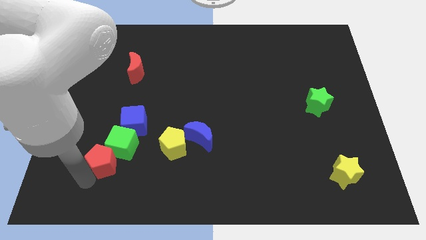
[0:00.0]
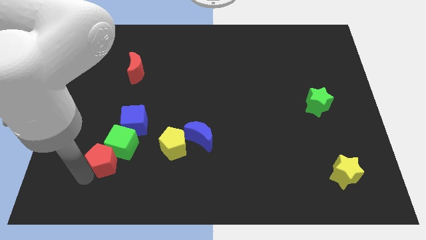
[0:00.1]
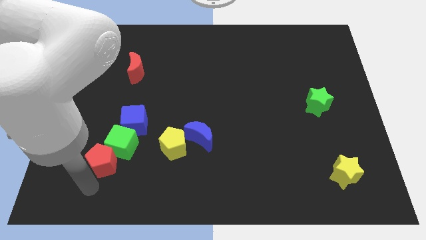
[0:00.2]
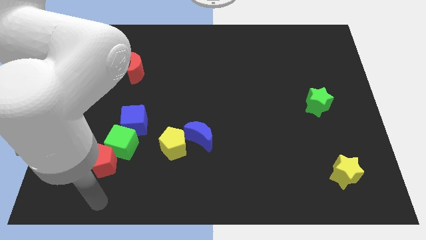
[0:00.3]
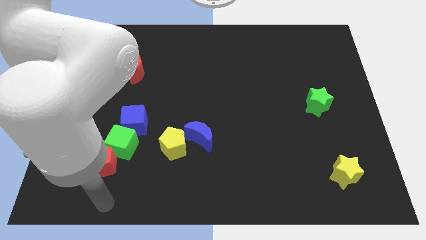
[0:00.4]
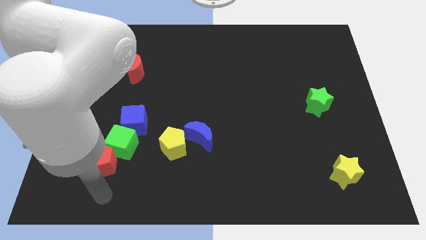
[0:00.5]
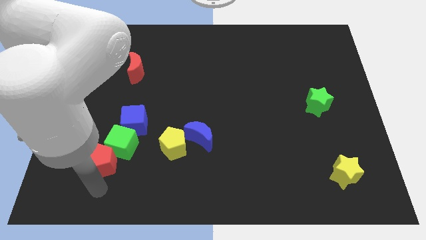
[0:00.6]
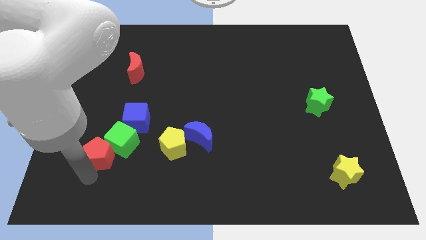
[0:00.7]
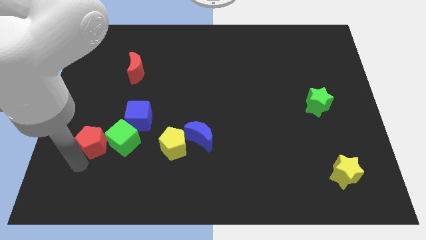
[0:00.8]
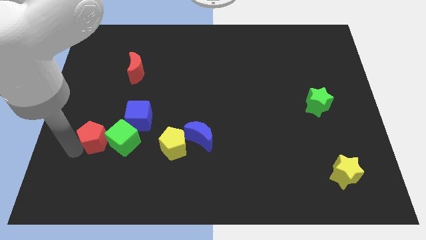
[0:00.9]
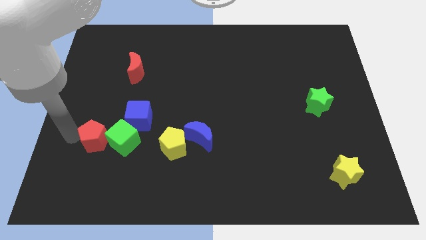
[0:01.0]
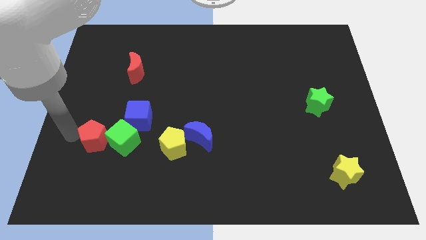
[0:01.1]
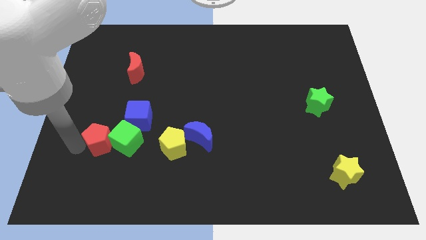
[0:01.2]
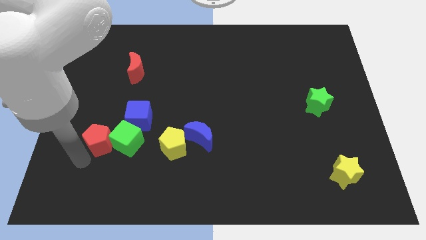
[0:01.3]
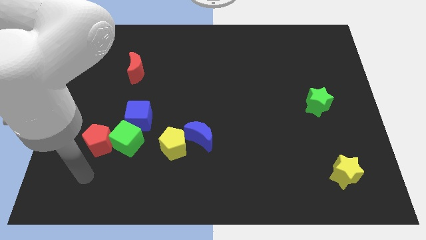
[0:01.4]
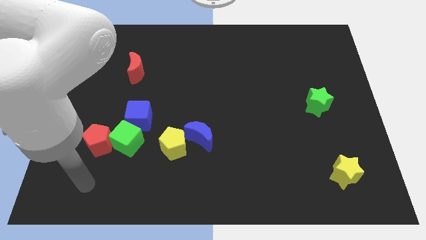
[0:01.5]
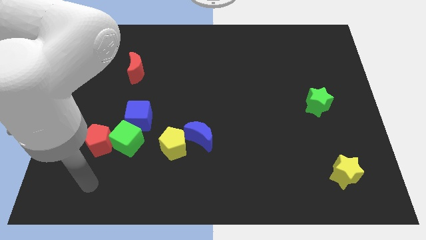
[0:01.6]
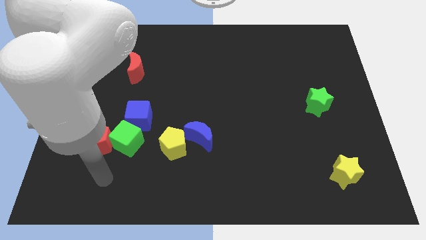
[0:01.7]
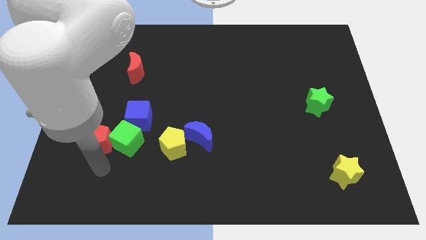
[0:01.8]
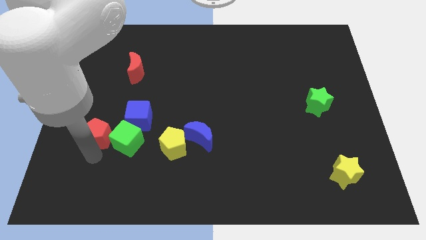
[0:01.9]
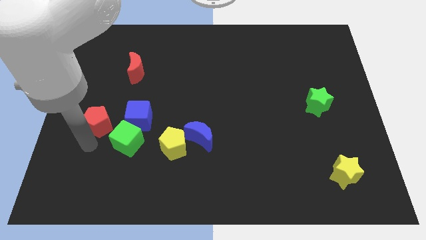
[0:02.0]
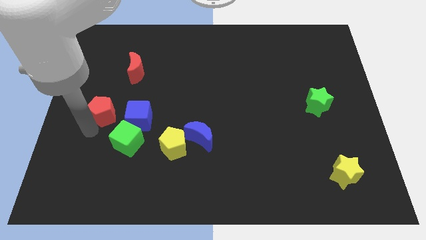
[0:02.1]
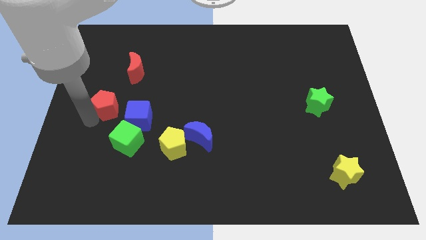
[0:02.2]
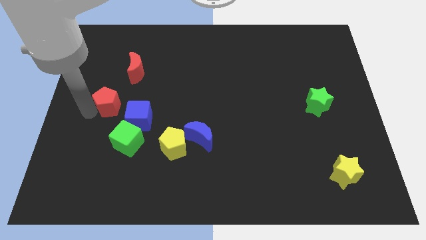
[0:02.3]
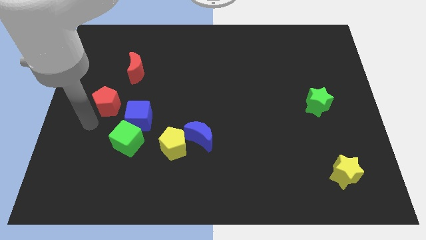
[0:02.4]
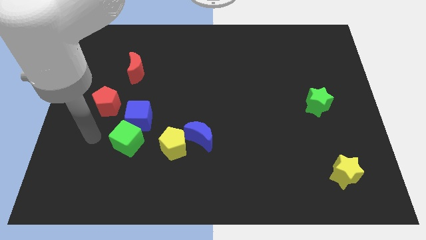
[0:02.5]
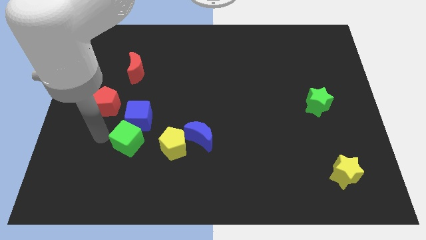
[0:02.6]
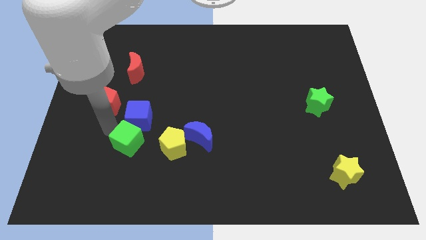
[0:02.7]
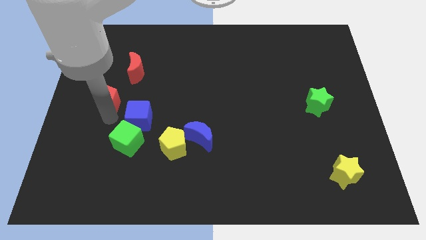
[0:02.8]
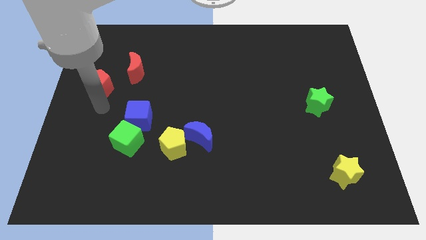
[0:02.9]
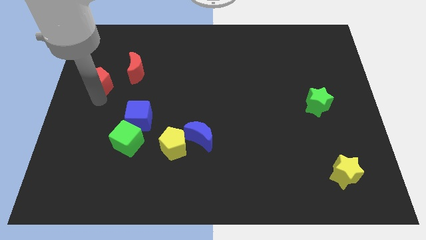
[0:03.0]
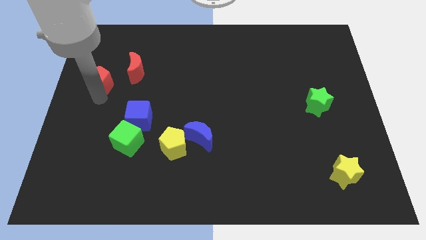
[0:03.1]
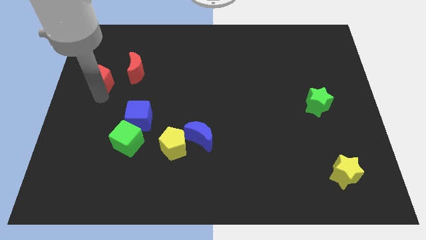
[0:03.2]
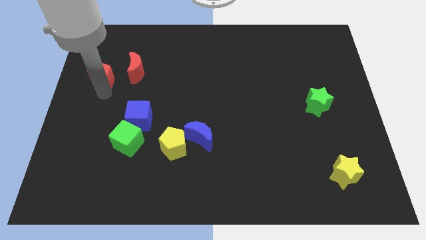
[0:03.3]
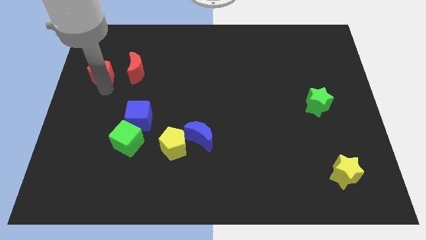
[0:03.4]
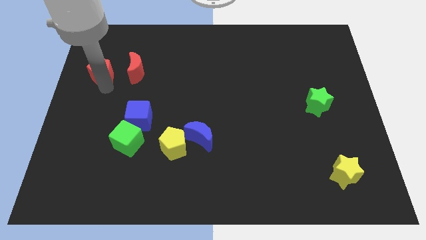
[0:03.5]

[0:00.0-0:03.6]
place red pentagon adjacent to red moon

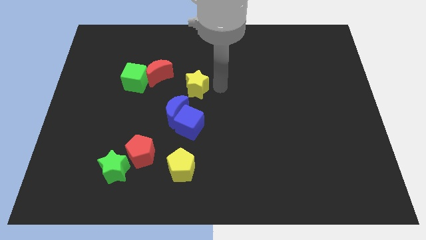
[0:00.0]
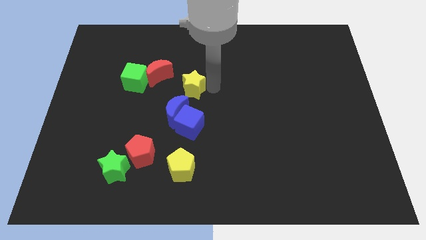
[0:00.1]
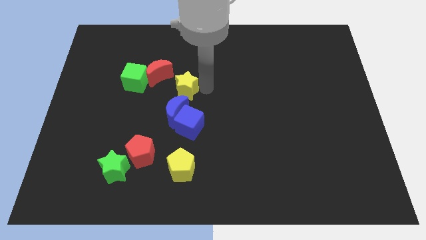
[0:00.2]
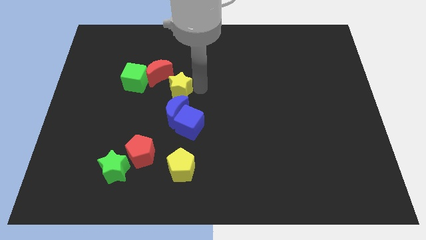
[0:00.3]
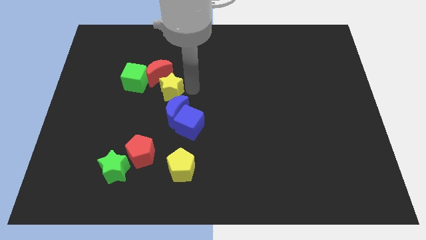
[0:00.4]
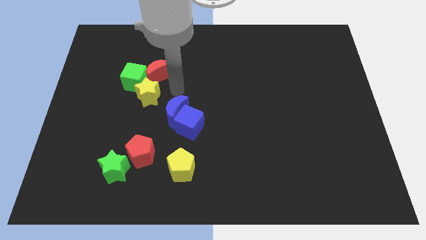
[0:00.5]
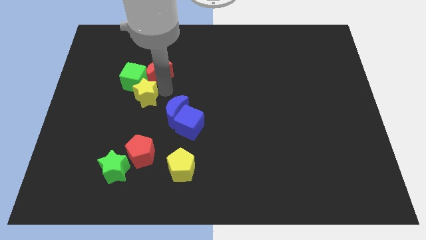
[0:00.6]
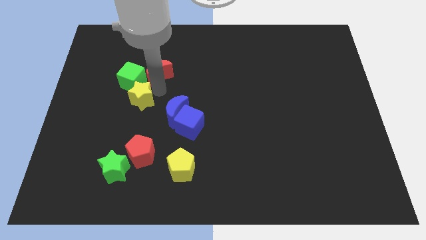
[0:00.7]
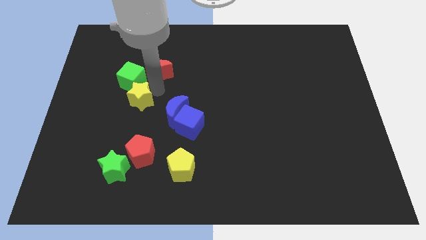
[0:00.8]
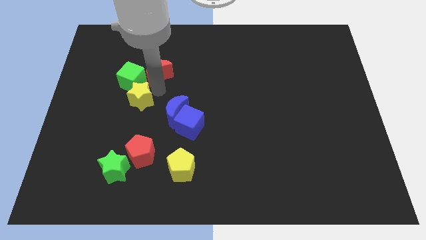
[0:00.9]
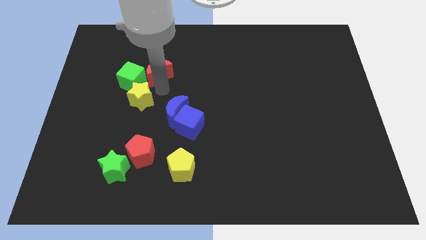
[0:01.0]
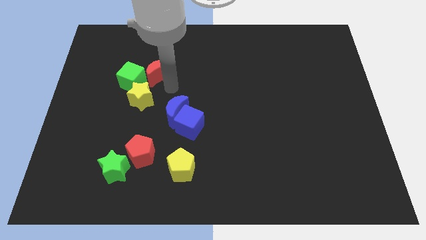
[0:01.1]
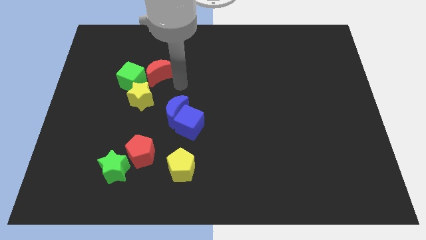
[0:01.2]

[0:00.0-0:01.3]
touch the green cube with the yellow star

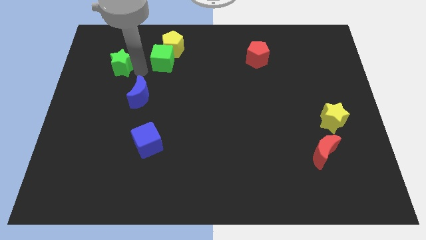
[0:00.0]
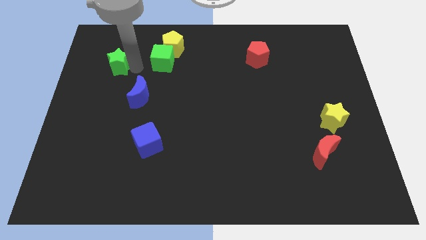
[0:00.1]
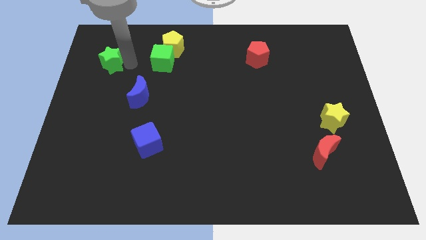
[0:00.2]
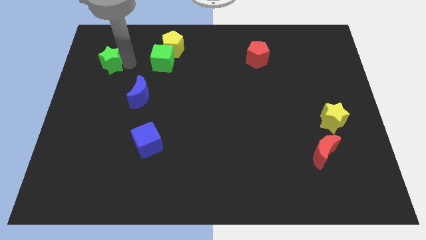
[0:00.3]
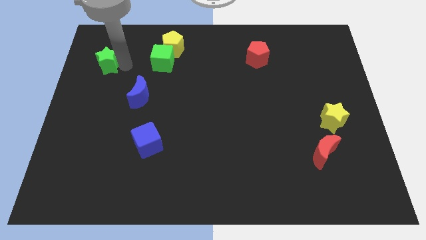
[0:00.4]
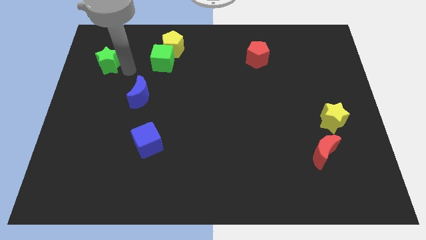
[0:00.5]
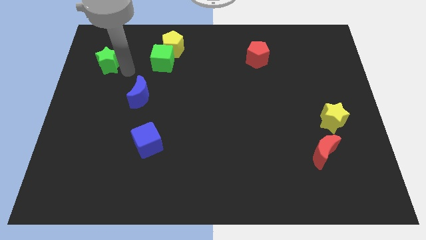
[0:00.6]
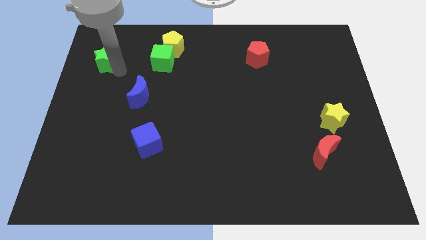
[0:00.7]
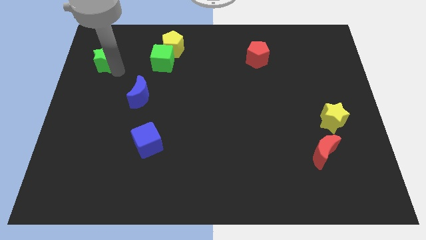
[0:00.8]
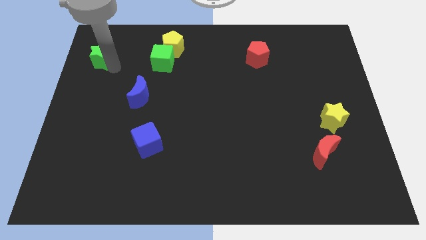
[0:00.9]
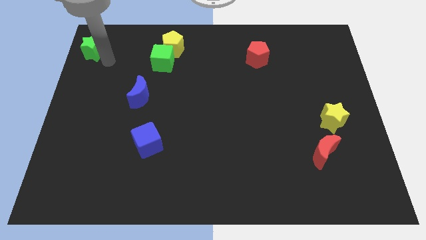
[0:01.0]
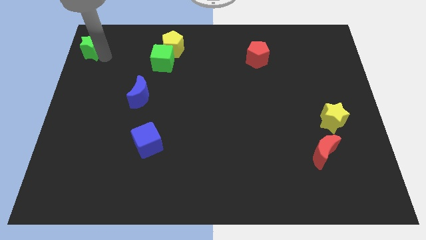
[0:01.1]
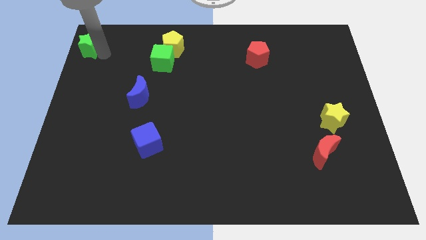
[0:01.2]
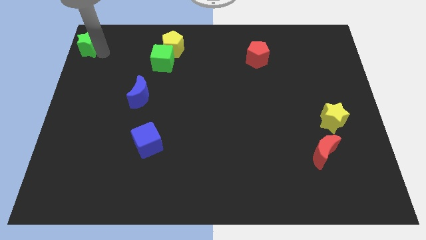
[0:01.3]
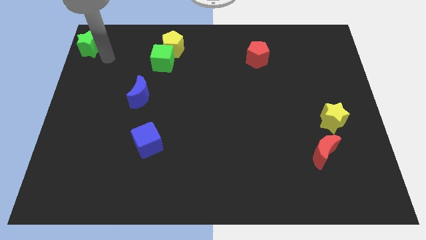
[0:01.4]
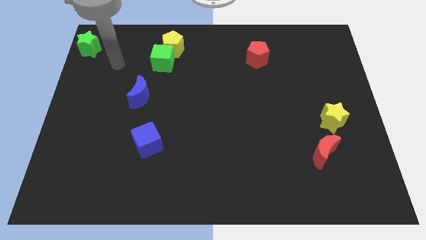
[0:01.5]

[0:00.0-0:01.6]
move green star to the top left corner of the board

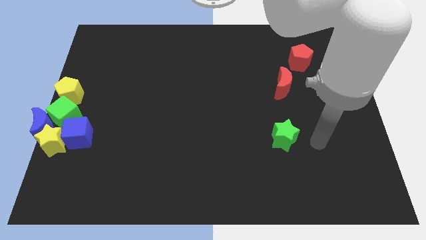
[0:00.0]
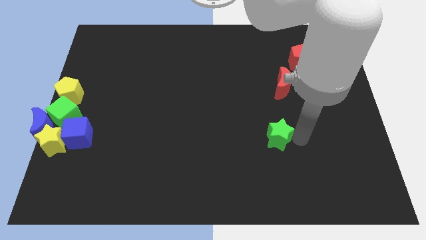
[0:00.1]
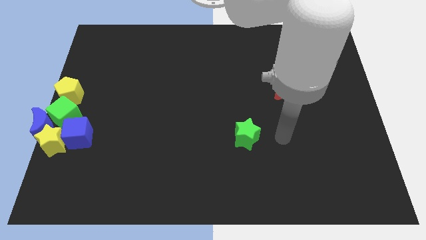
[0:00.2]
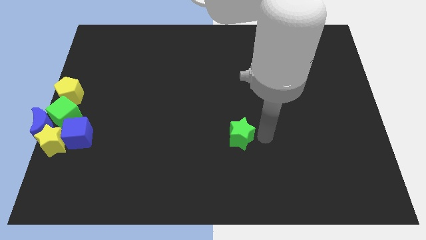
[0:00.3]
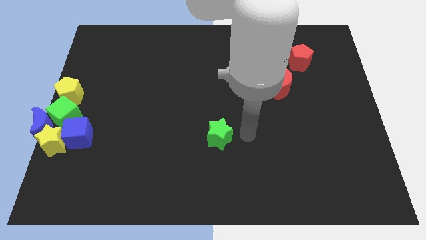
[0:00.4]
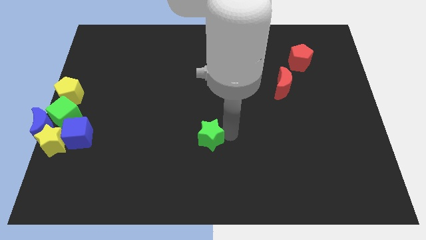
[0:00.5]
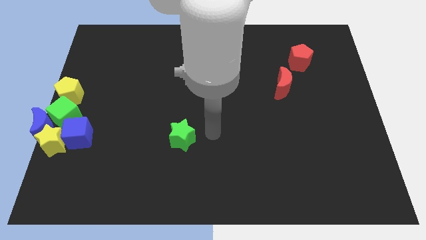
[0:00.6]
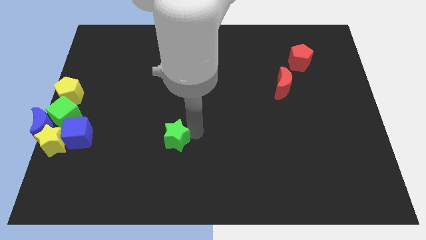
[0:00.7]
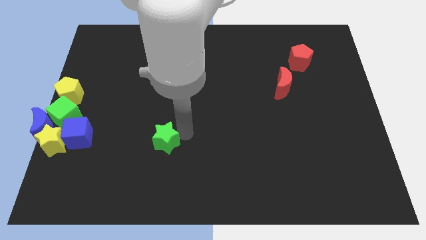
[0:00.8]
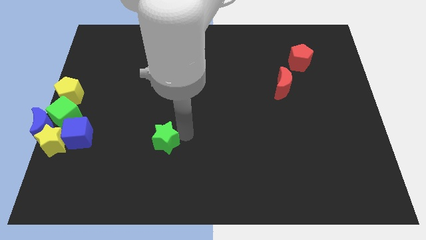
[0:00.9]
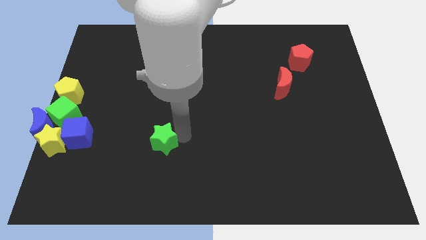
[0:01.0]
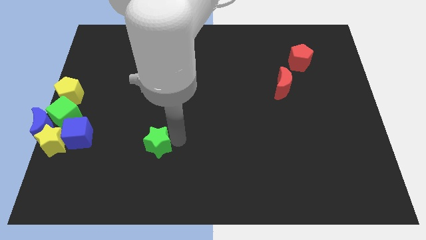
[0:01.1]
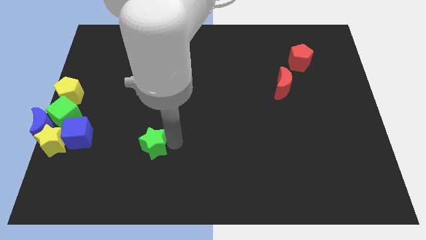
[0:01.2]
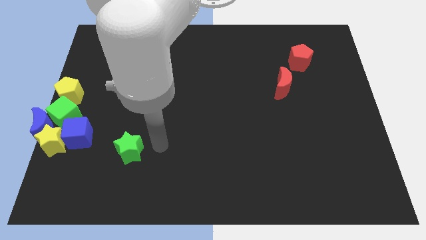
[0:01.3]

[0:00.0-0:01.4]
place the green star diagonally bottom left to the red moon

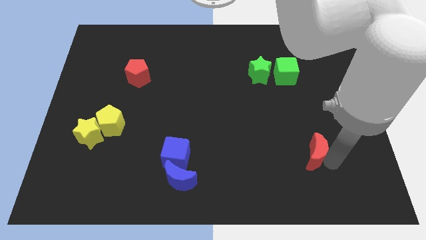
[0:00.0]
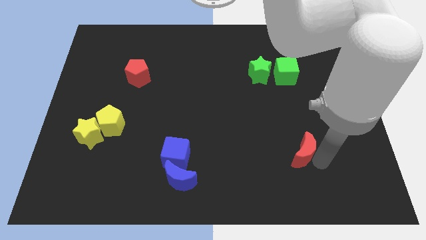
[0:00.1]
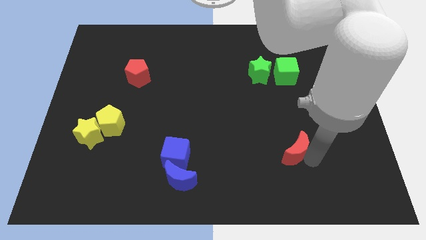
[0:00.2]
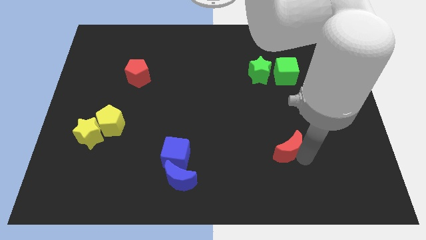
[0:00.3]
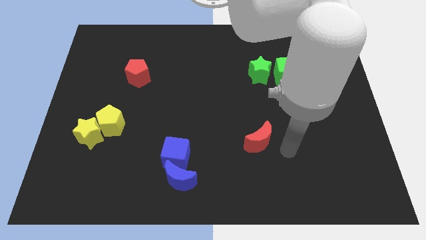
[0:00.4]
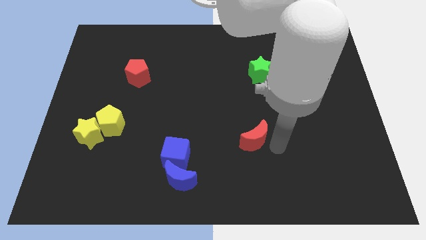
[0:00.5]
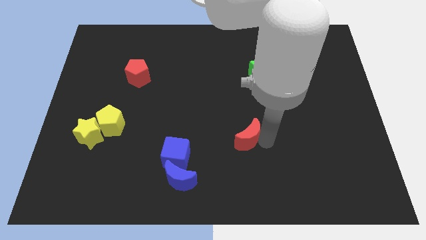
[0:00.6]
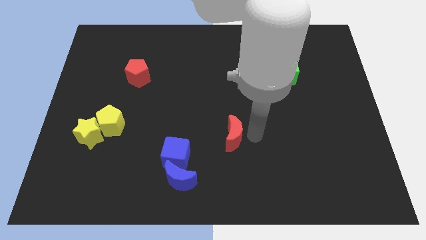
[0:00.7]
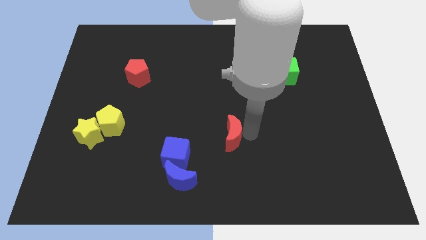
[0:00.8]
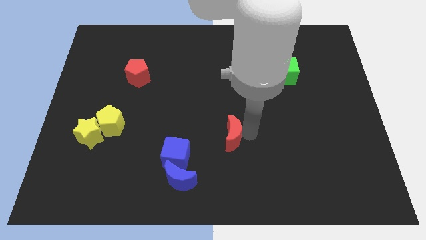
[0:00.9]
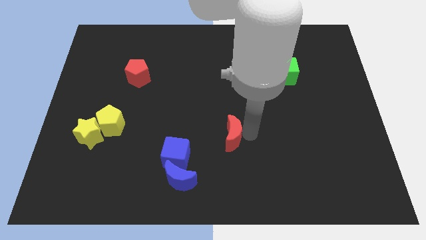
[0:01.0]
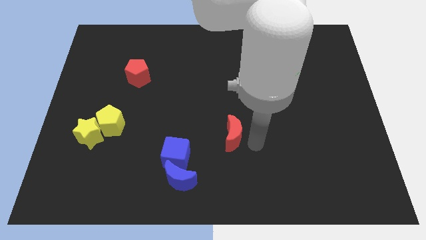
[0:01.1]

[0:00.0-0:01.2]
place red moon to the top right of blue cube
